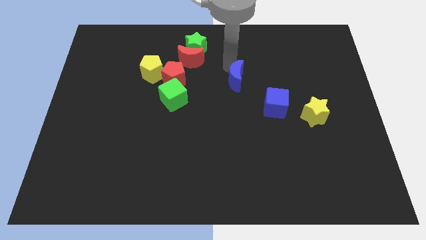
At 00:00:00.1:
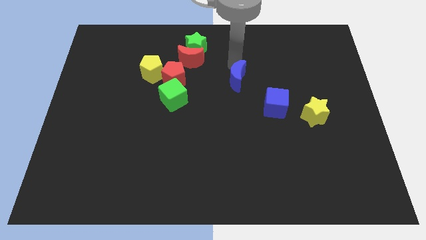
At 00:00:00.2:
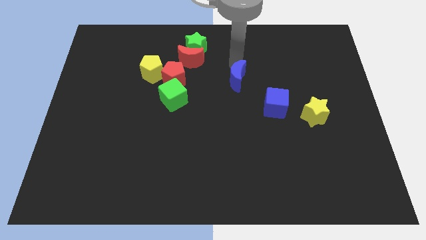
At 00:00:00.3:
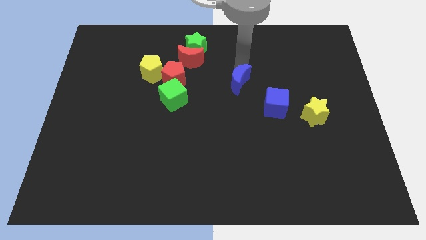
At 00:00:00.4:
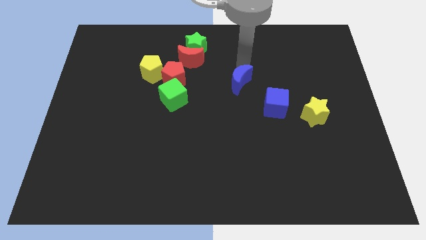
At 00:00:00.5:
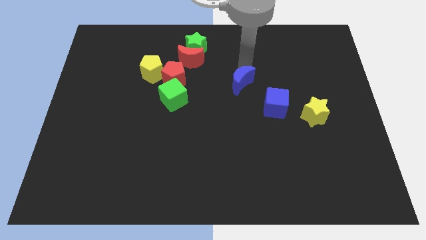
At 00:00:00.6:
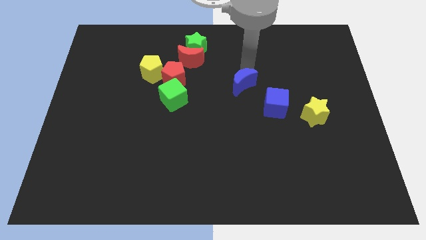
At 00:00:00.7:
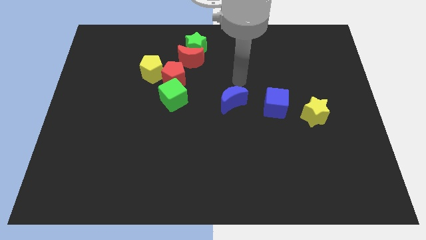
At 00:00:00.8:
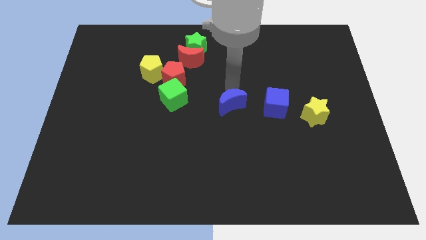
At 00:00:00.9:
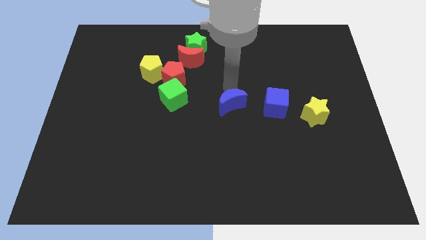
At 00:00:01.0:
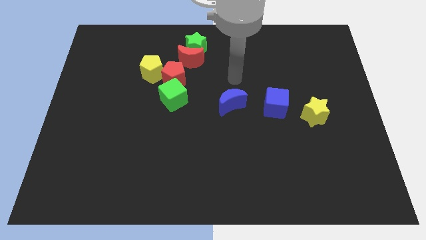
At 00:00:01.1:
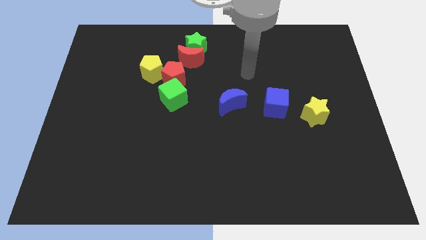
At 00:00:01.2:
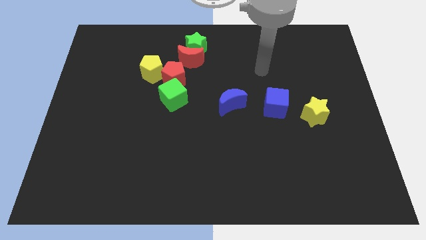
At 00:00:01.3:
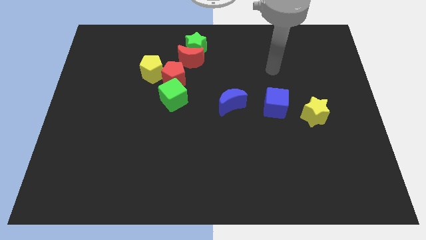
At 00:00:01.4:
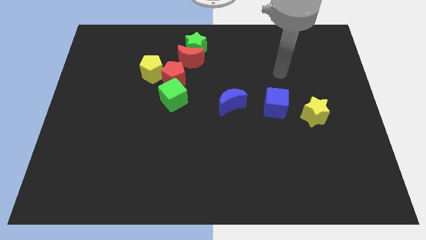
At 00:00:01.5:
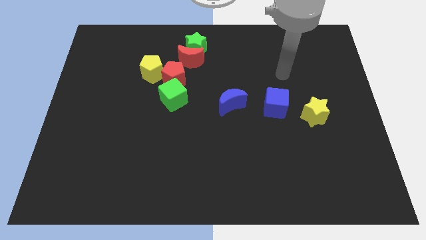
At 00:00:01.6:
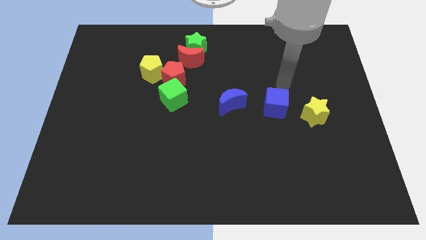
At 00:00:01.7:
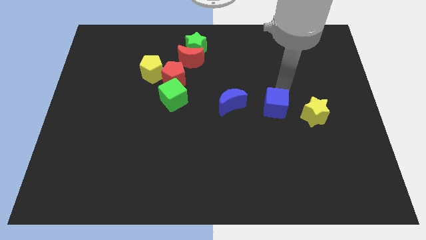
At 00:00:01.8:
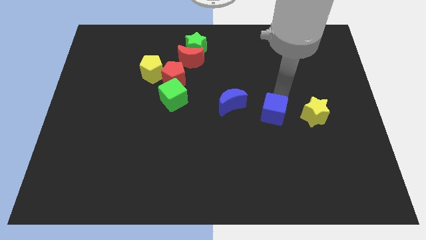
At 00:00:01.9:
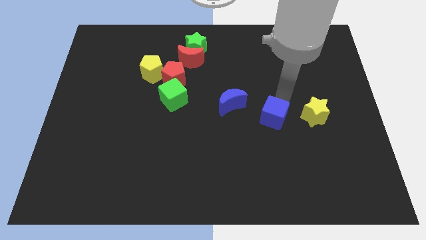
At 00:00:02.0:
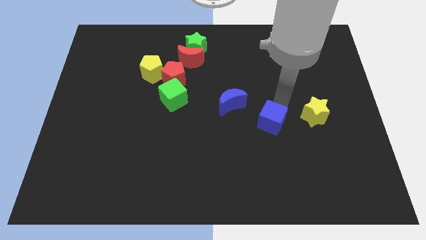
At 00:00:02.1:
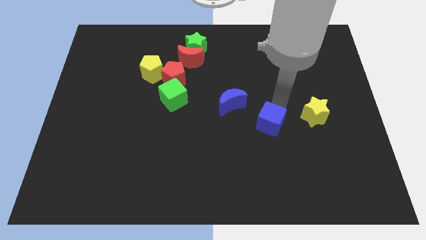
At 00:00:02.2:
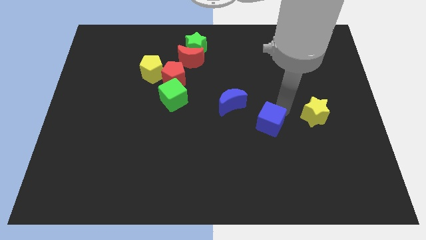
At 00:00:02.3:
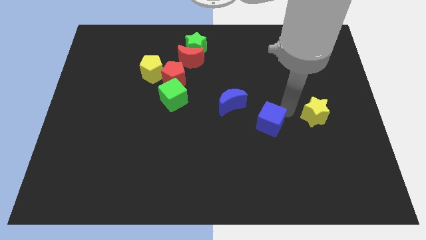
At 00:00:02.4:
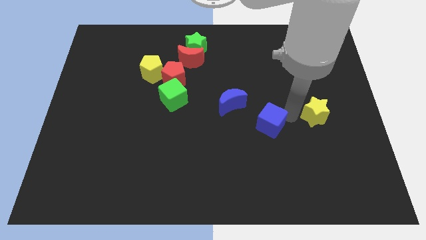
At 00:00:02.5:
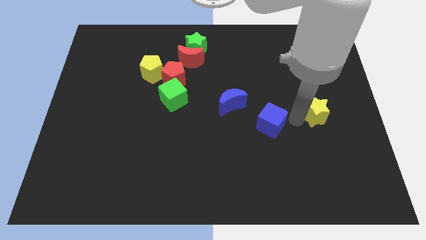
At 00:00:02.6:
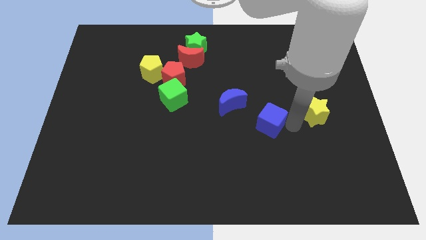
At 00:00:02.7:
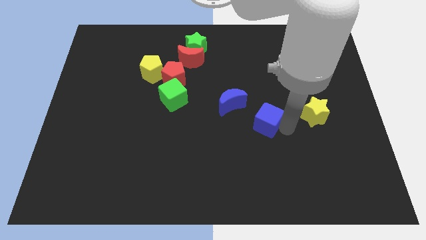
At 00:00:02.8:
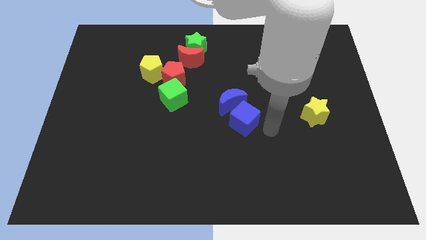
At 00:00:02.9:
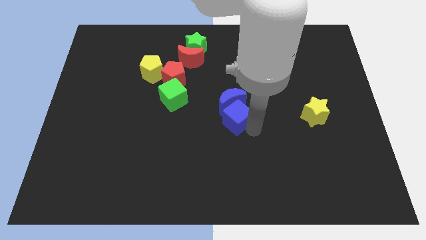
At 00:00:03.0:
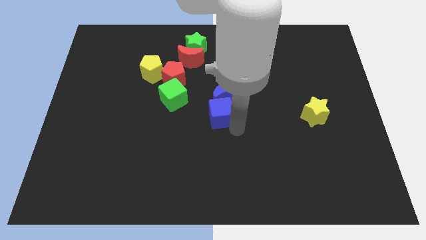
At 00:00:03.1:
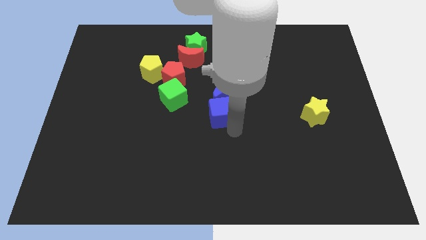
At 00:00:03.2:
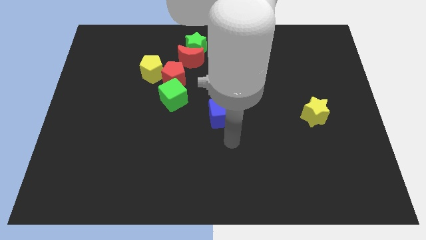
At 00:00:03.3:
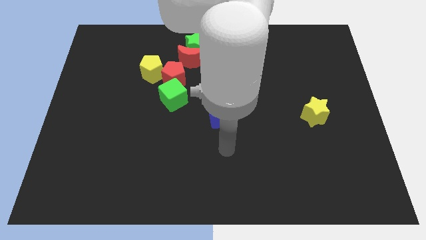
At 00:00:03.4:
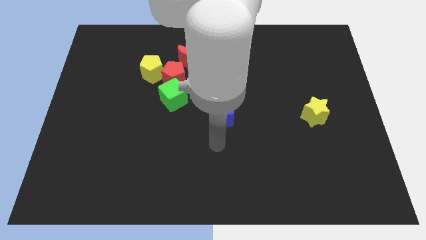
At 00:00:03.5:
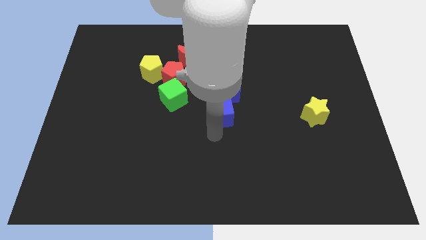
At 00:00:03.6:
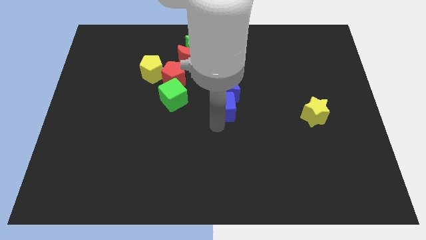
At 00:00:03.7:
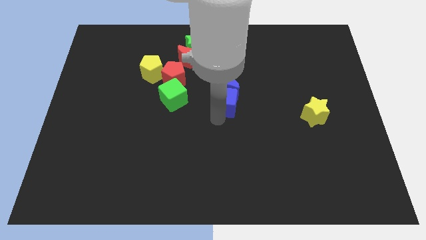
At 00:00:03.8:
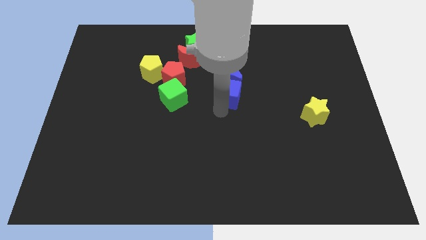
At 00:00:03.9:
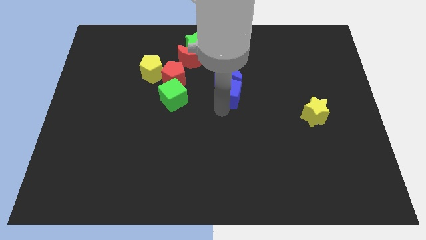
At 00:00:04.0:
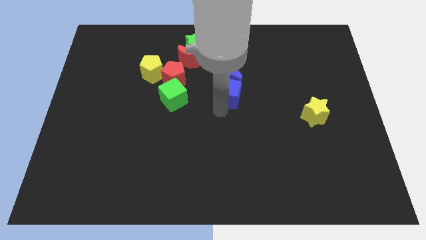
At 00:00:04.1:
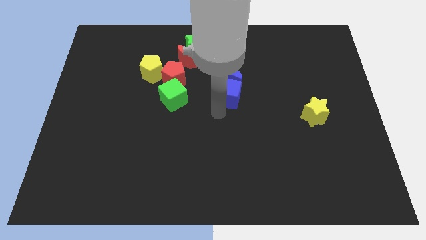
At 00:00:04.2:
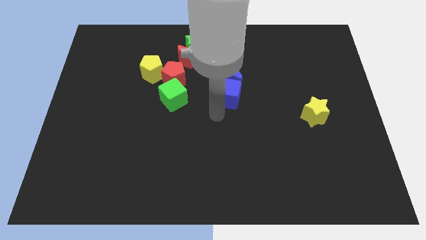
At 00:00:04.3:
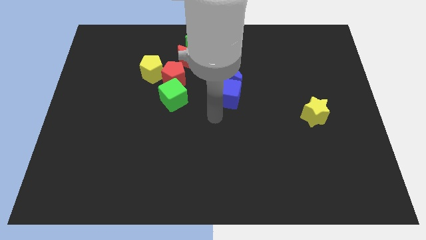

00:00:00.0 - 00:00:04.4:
move the blue cube into the blue crescent

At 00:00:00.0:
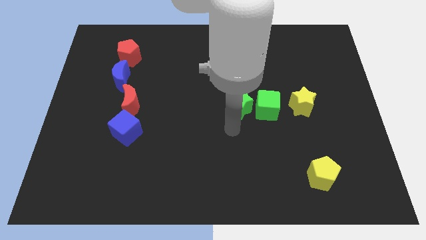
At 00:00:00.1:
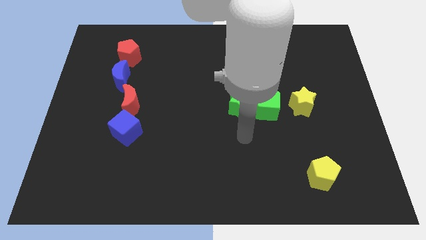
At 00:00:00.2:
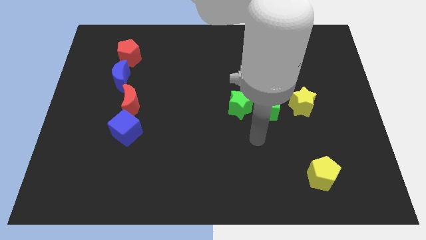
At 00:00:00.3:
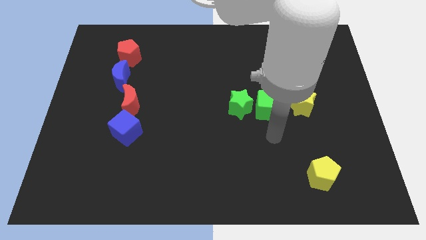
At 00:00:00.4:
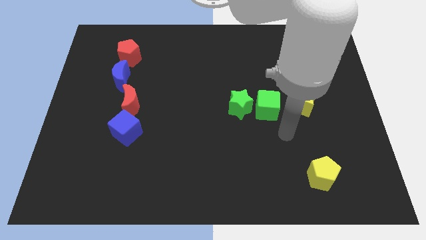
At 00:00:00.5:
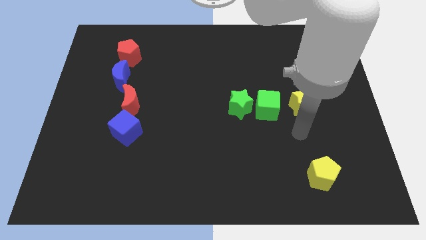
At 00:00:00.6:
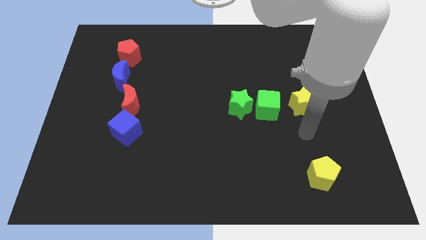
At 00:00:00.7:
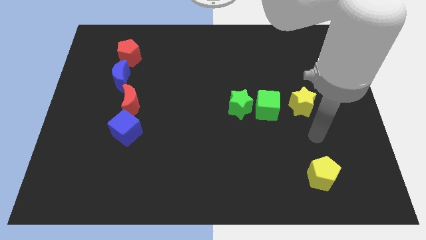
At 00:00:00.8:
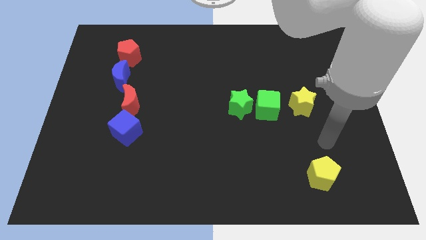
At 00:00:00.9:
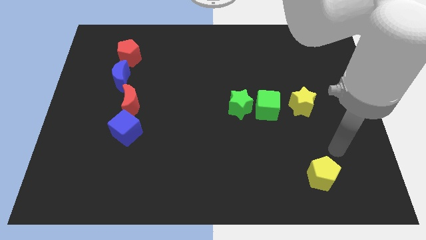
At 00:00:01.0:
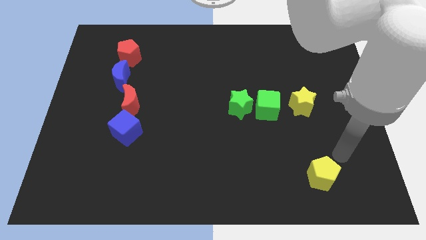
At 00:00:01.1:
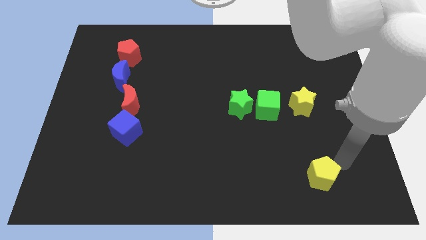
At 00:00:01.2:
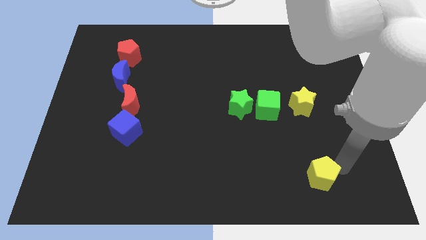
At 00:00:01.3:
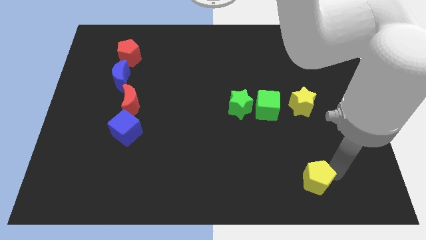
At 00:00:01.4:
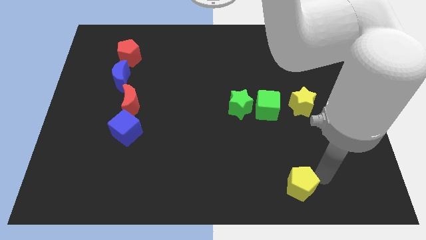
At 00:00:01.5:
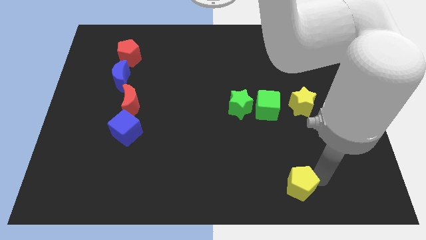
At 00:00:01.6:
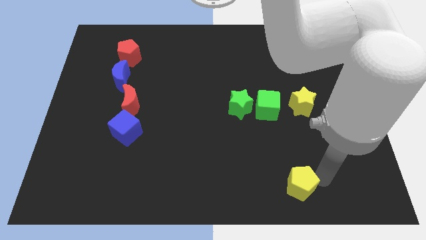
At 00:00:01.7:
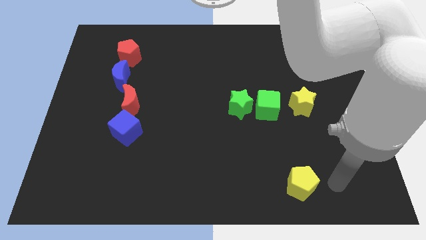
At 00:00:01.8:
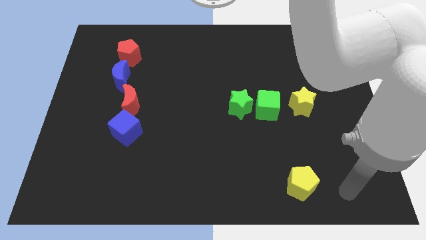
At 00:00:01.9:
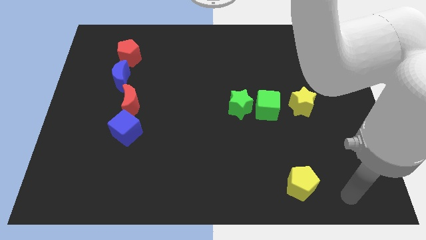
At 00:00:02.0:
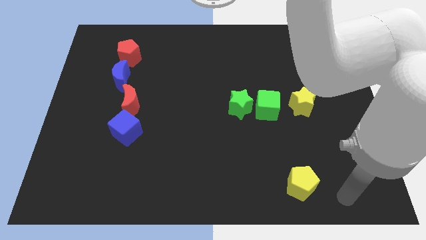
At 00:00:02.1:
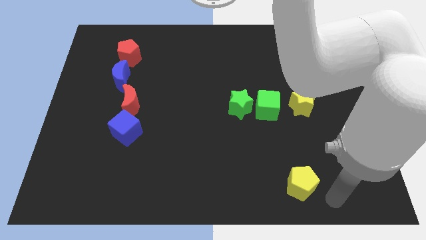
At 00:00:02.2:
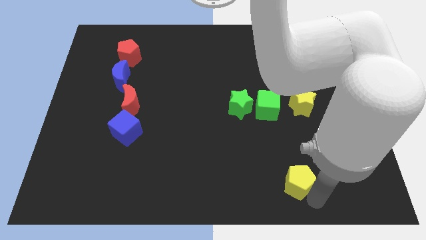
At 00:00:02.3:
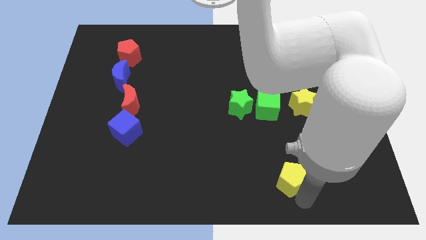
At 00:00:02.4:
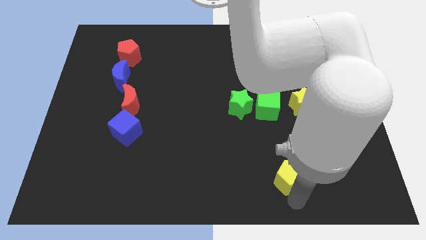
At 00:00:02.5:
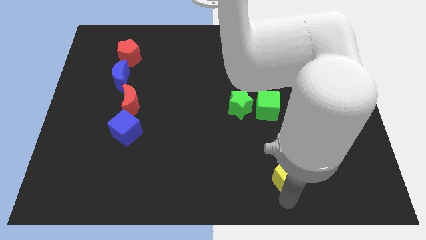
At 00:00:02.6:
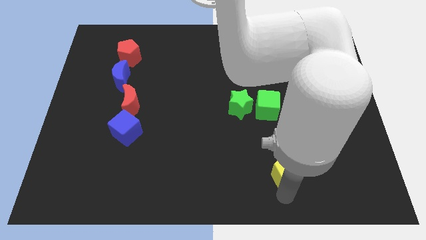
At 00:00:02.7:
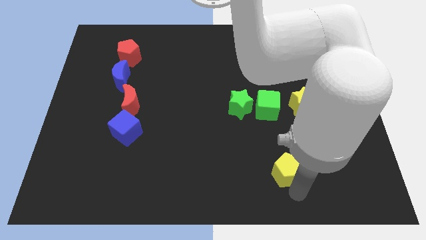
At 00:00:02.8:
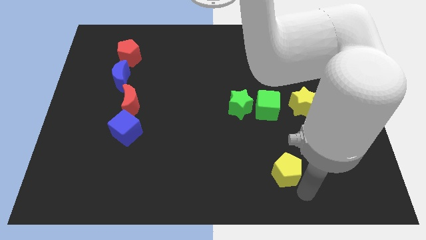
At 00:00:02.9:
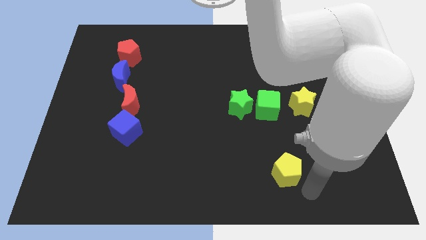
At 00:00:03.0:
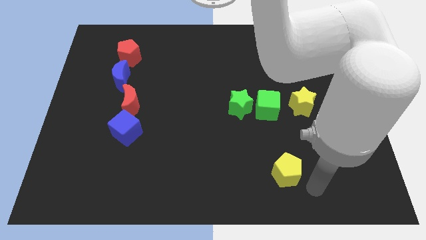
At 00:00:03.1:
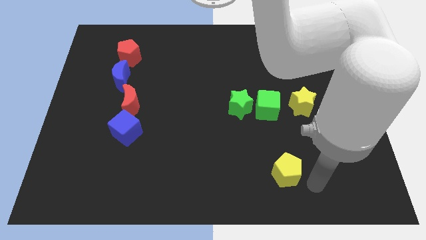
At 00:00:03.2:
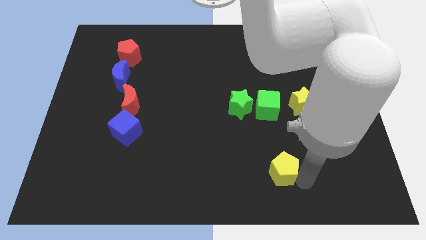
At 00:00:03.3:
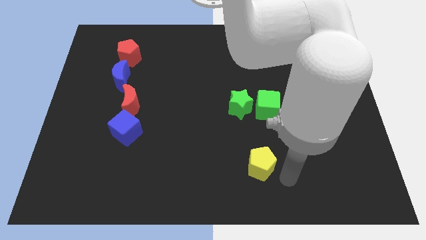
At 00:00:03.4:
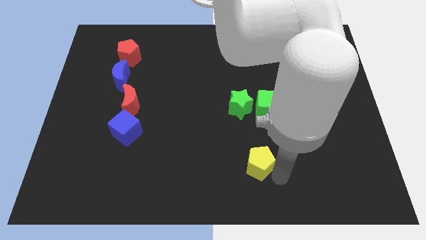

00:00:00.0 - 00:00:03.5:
place the yellow pentagon on the bottom side of the green cube

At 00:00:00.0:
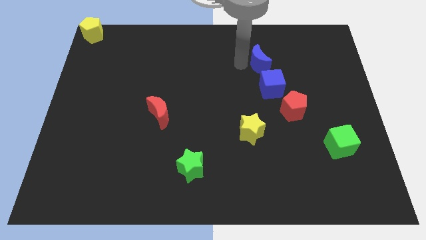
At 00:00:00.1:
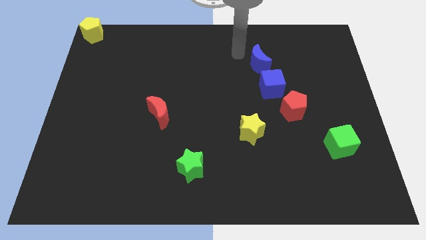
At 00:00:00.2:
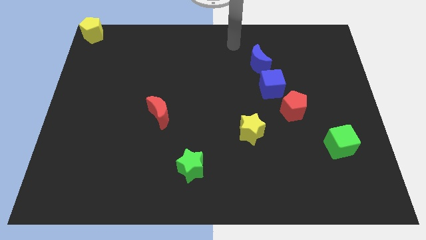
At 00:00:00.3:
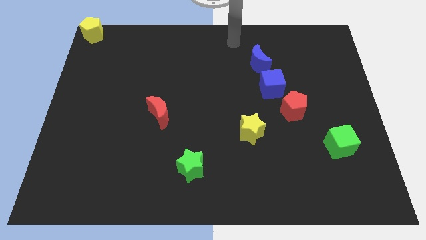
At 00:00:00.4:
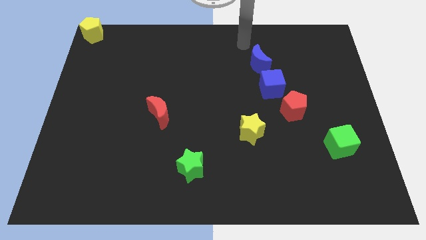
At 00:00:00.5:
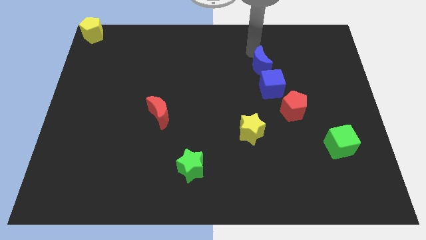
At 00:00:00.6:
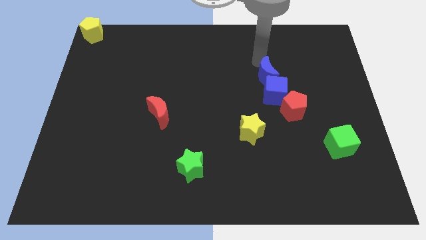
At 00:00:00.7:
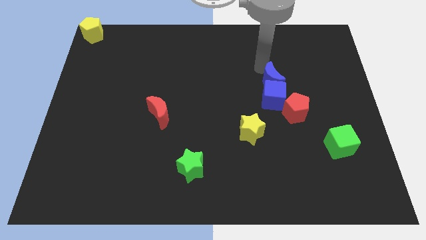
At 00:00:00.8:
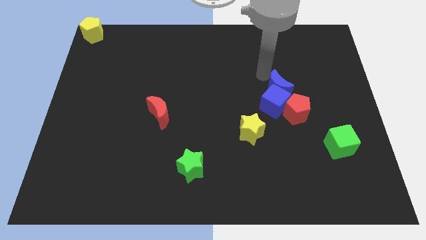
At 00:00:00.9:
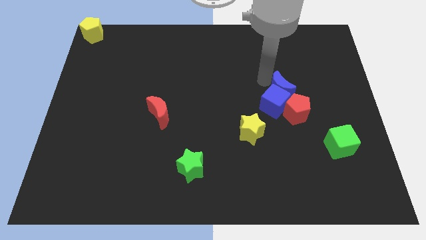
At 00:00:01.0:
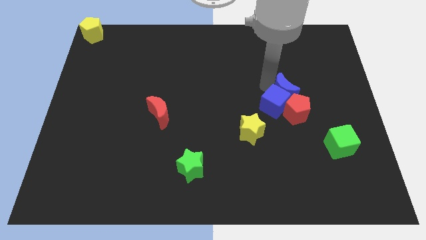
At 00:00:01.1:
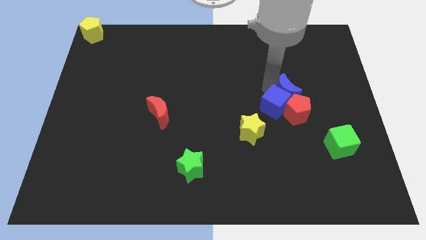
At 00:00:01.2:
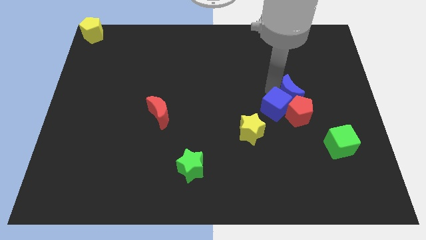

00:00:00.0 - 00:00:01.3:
push the group of blue blocks into the red pentagon
